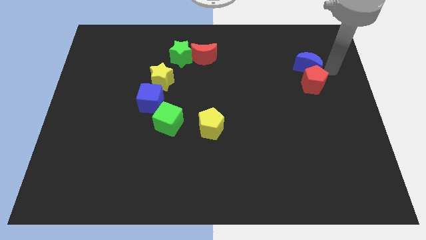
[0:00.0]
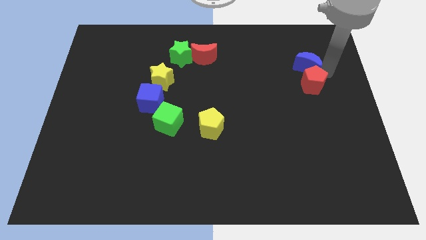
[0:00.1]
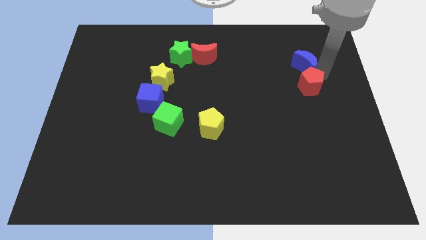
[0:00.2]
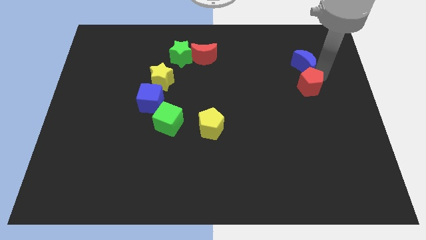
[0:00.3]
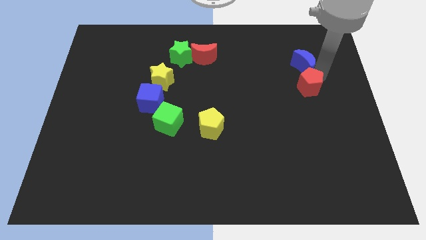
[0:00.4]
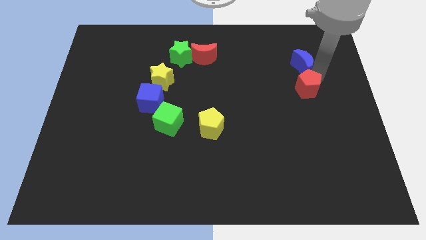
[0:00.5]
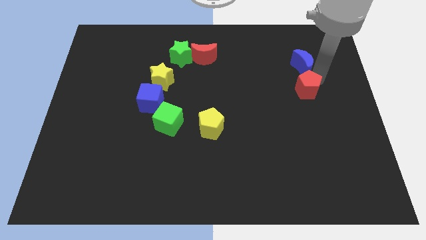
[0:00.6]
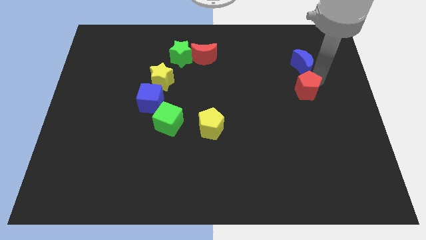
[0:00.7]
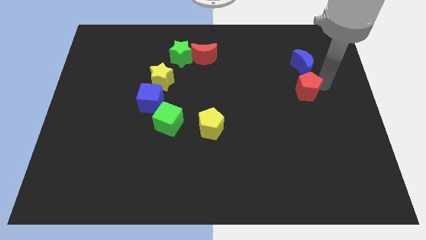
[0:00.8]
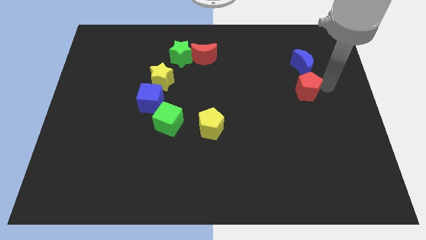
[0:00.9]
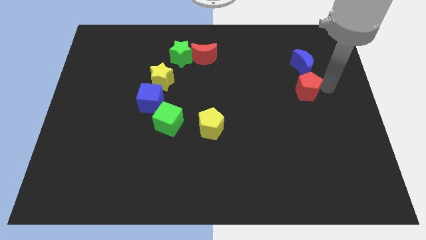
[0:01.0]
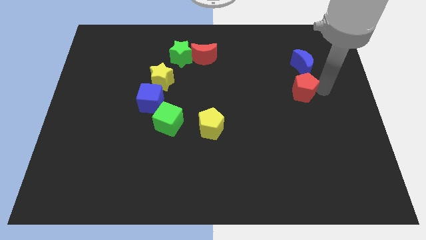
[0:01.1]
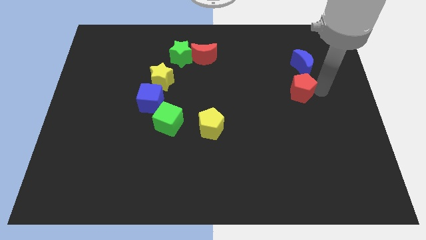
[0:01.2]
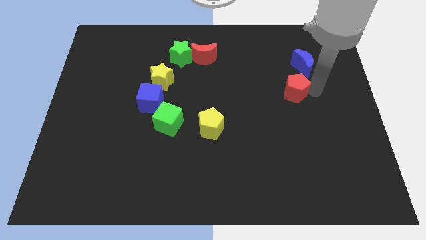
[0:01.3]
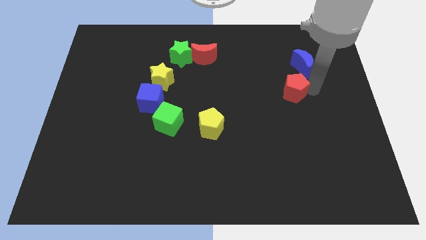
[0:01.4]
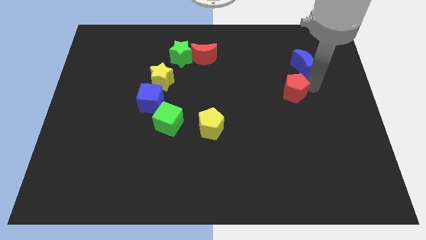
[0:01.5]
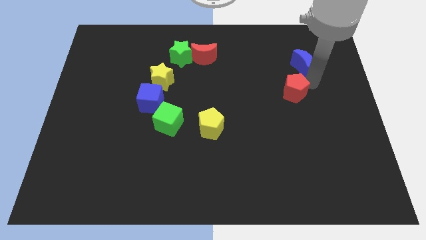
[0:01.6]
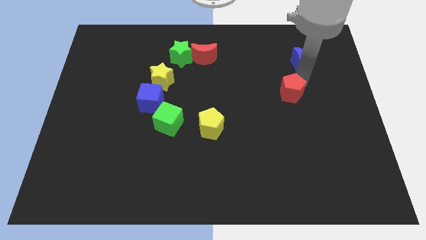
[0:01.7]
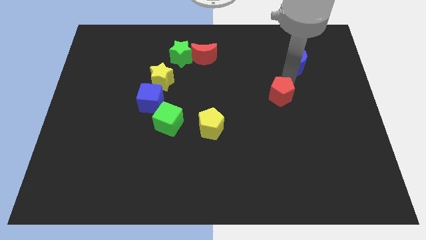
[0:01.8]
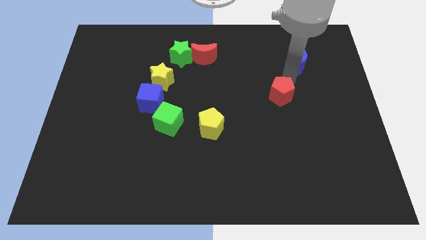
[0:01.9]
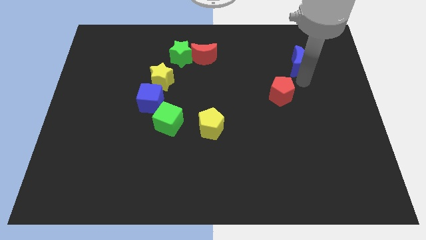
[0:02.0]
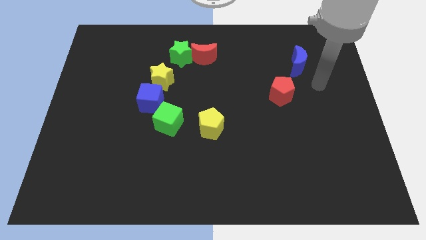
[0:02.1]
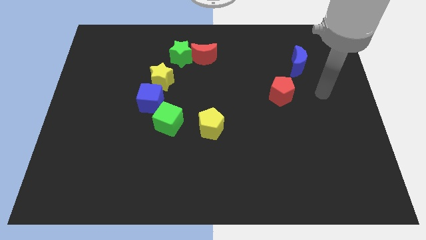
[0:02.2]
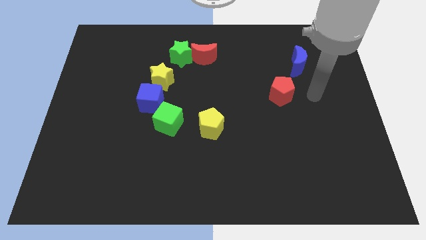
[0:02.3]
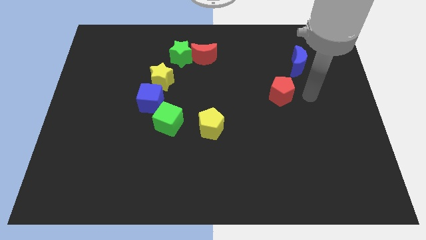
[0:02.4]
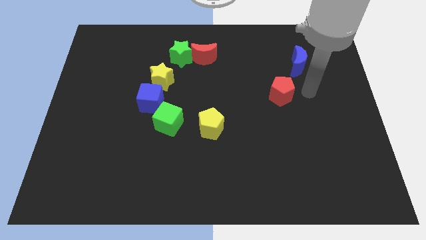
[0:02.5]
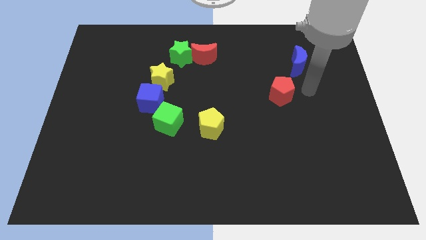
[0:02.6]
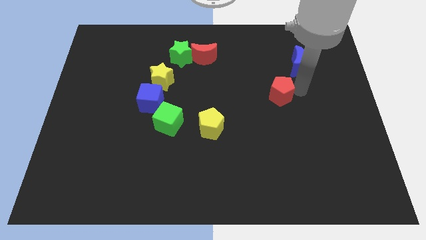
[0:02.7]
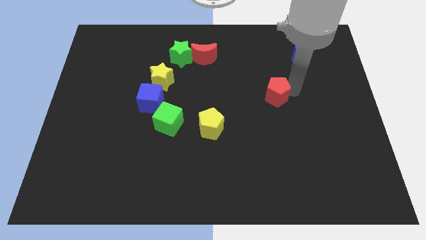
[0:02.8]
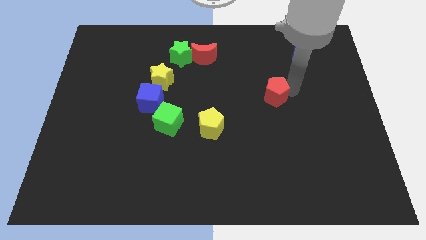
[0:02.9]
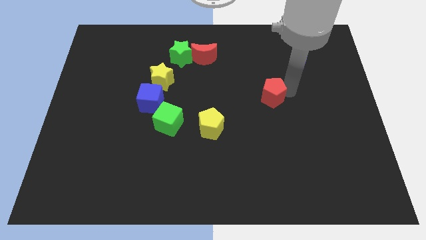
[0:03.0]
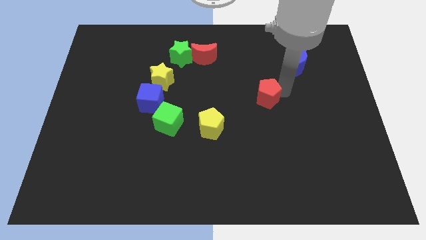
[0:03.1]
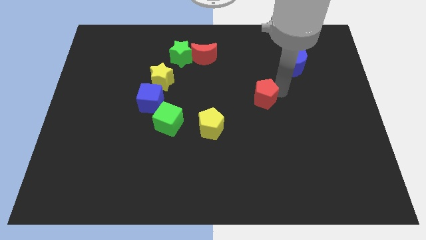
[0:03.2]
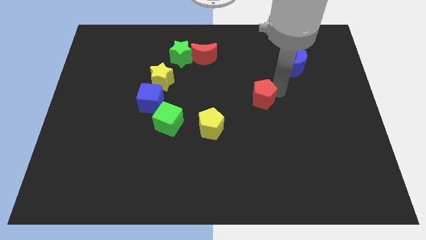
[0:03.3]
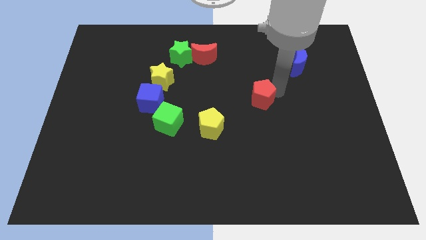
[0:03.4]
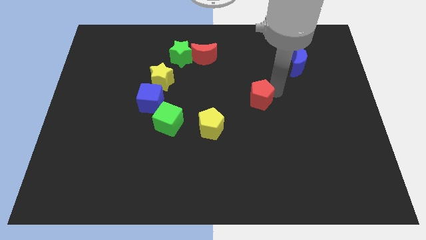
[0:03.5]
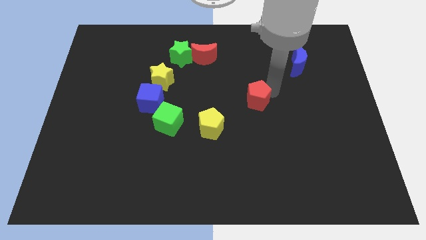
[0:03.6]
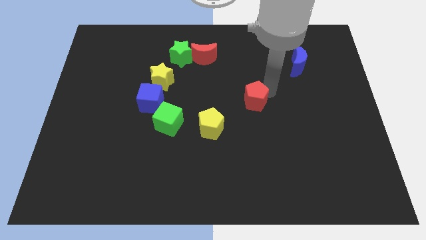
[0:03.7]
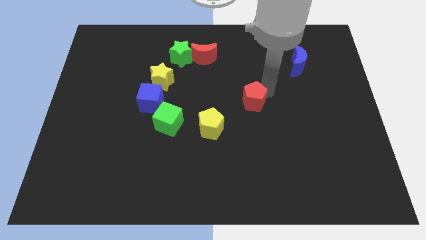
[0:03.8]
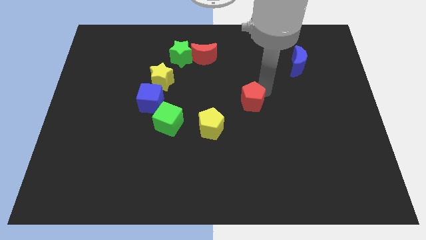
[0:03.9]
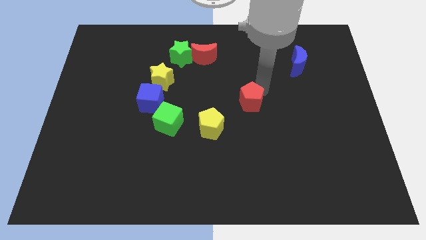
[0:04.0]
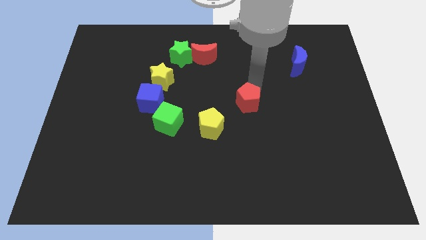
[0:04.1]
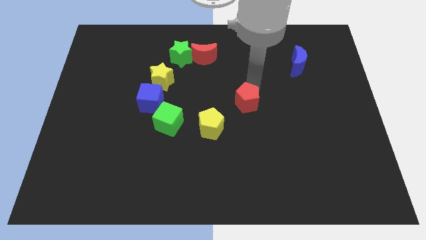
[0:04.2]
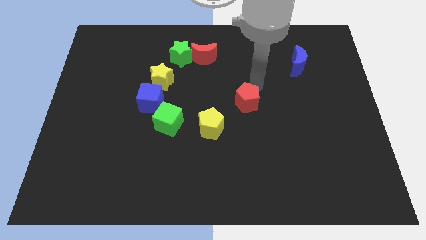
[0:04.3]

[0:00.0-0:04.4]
put the red pentagon diagonal towards the right of the yellow pentagon

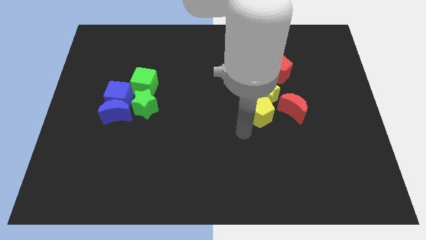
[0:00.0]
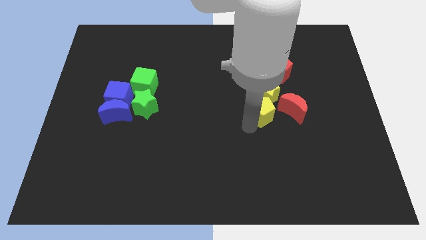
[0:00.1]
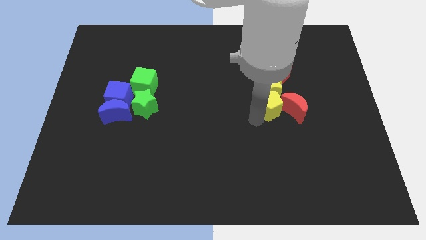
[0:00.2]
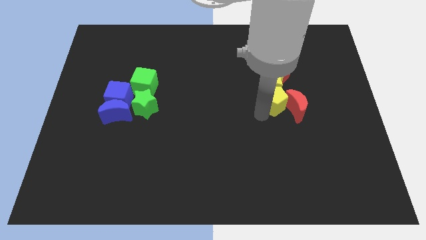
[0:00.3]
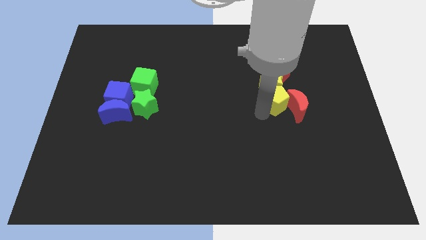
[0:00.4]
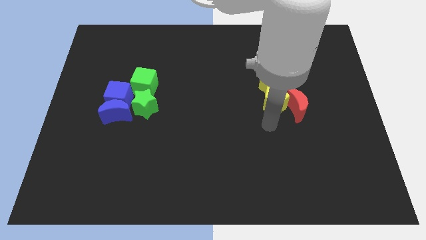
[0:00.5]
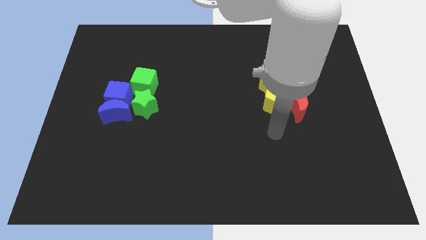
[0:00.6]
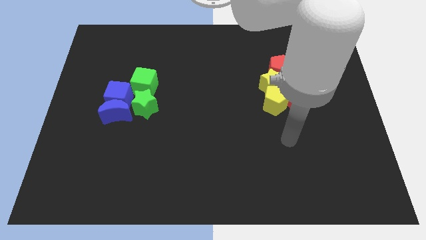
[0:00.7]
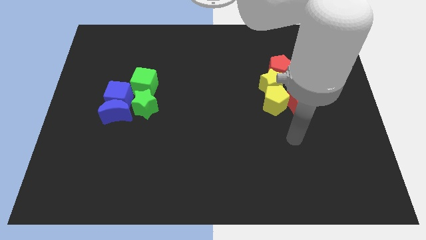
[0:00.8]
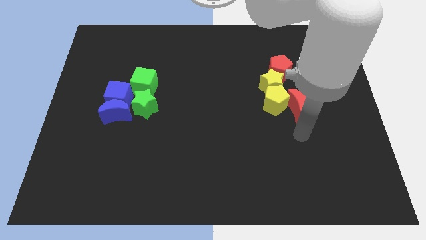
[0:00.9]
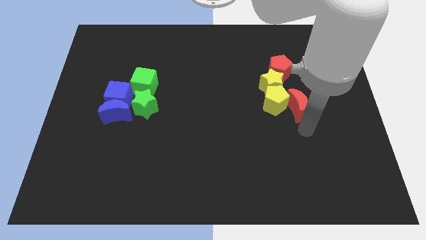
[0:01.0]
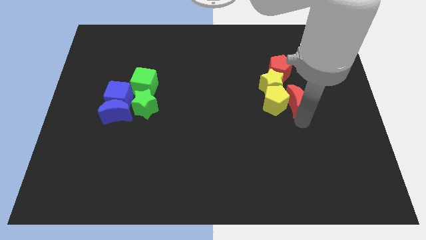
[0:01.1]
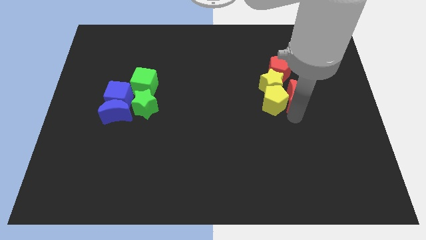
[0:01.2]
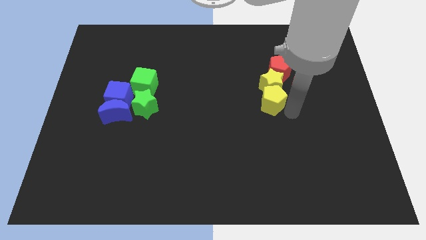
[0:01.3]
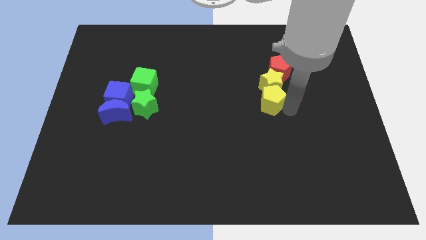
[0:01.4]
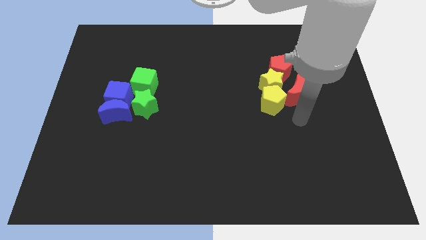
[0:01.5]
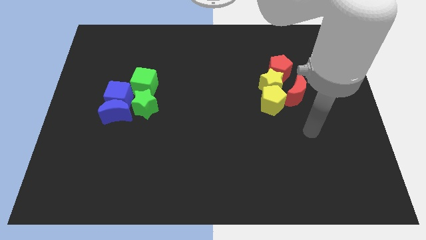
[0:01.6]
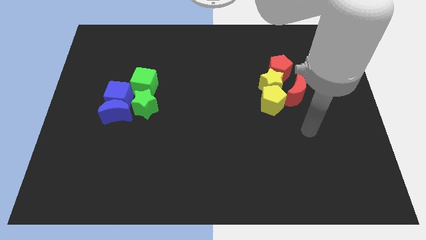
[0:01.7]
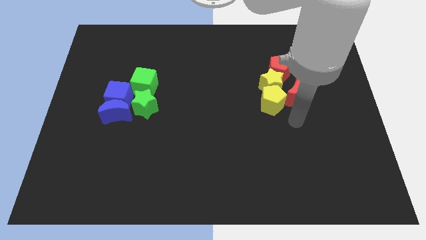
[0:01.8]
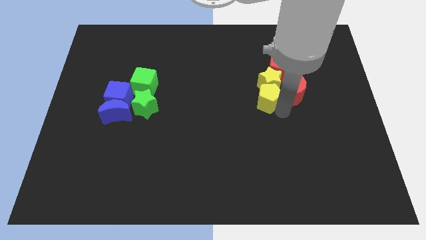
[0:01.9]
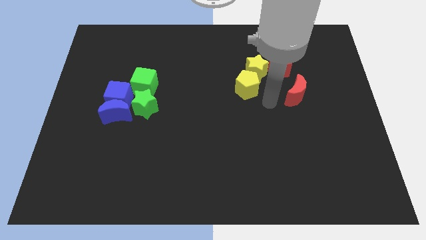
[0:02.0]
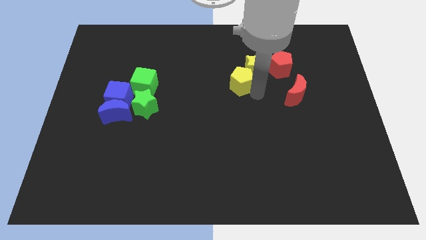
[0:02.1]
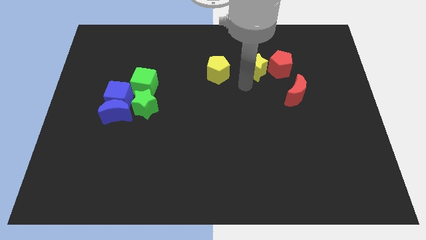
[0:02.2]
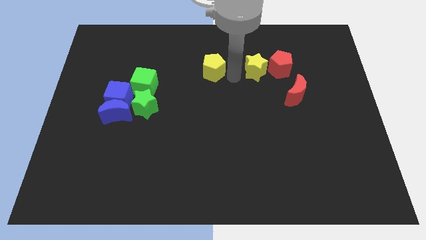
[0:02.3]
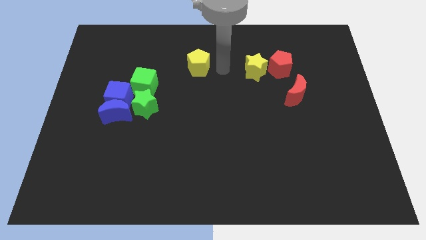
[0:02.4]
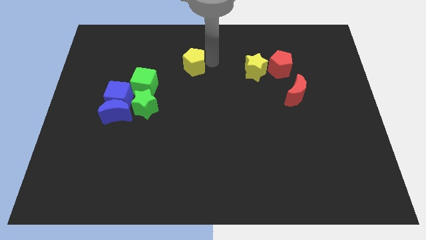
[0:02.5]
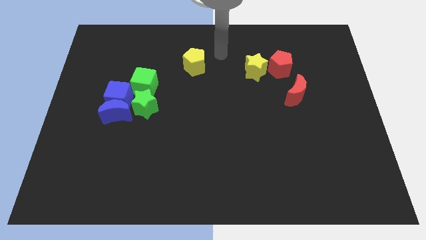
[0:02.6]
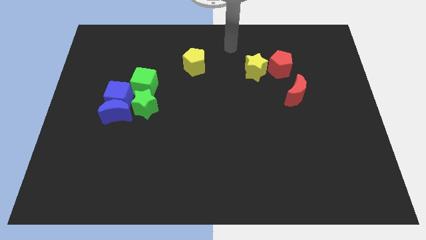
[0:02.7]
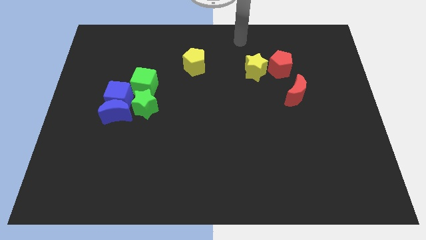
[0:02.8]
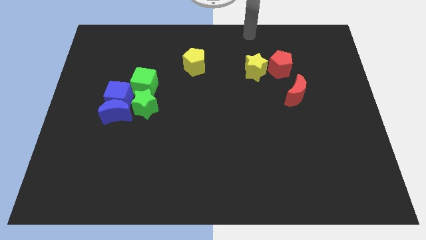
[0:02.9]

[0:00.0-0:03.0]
move the red moon slightly

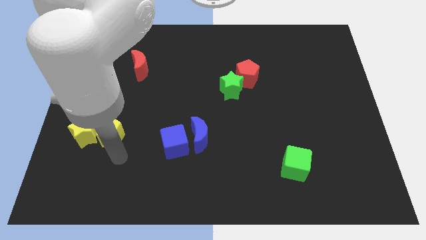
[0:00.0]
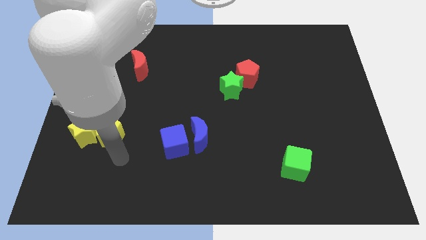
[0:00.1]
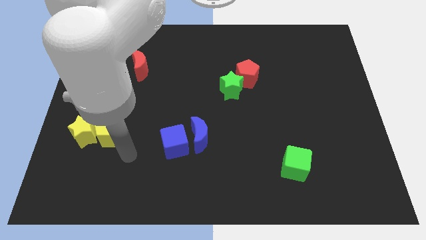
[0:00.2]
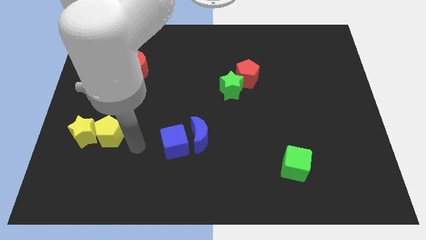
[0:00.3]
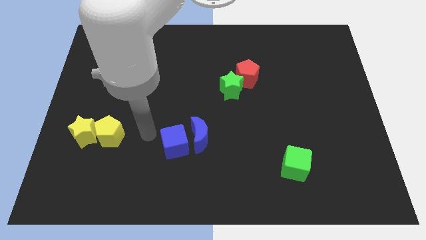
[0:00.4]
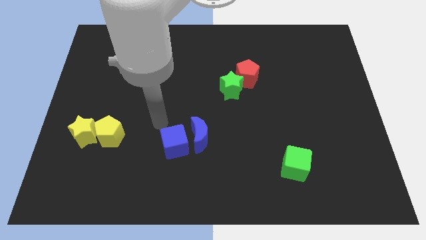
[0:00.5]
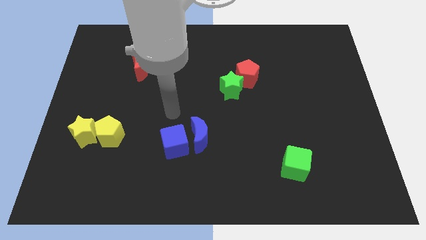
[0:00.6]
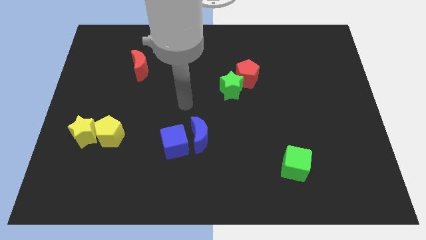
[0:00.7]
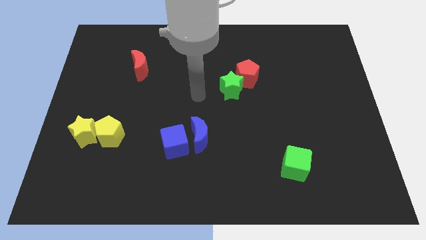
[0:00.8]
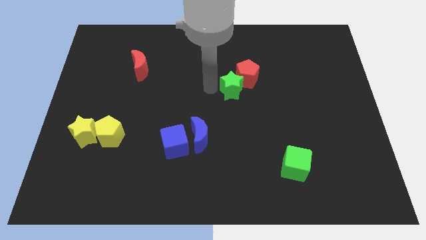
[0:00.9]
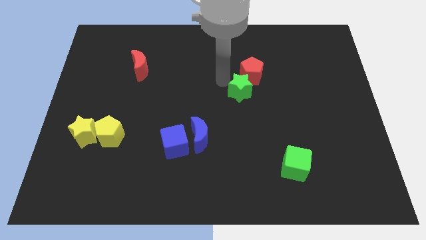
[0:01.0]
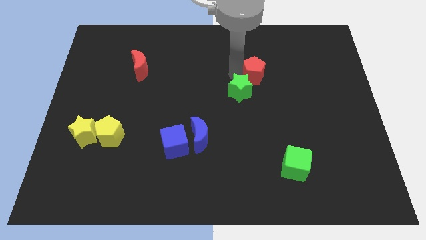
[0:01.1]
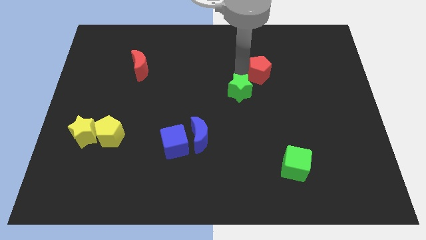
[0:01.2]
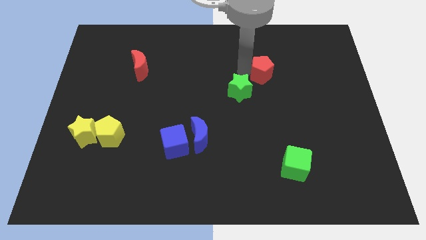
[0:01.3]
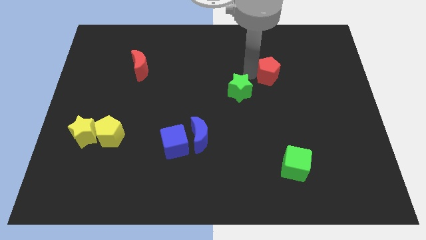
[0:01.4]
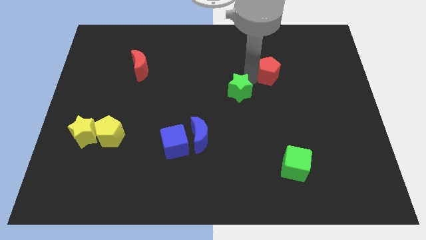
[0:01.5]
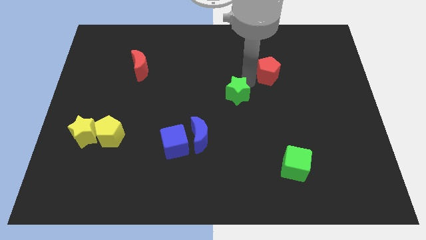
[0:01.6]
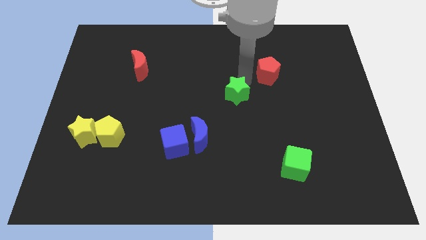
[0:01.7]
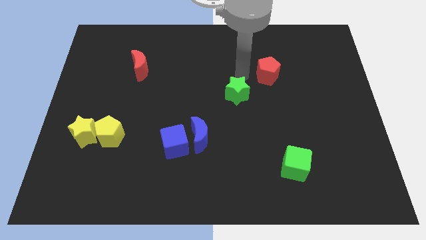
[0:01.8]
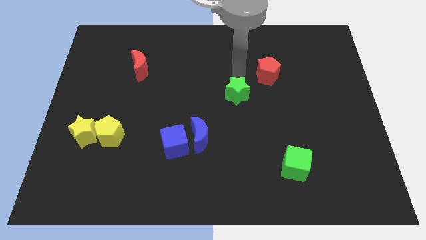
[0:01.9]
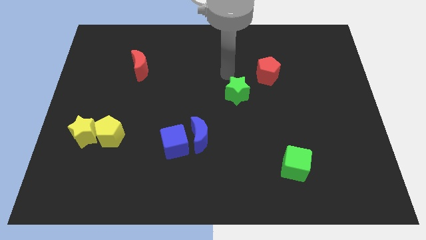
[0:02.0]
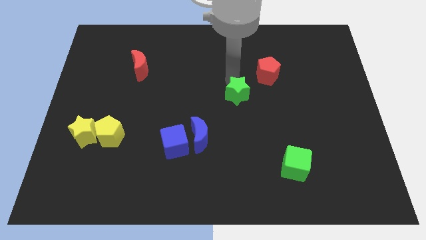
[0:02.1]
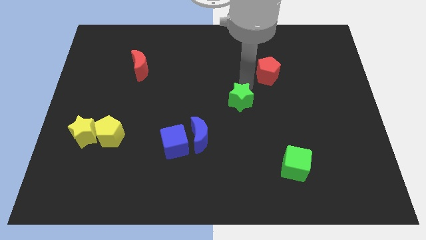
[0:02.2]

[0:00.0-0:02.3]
place the green star diagonally to the bottom left of the red pentagon
